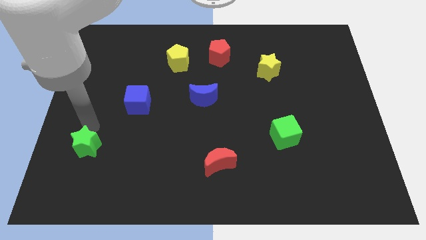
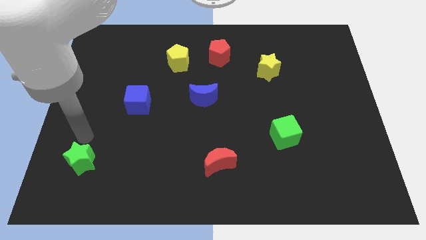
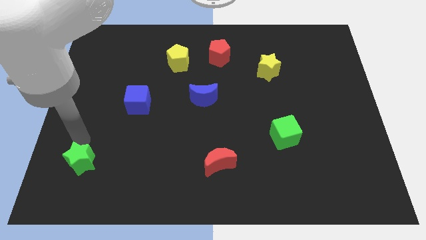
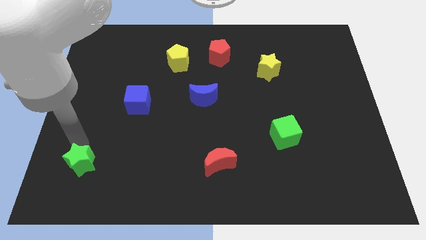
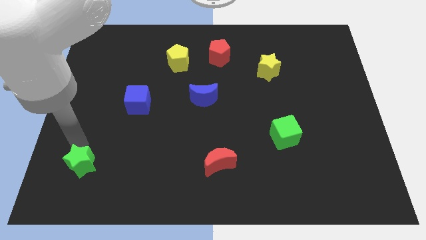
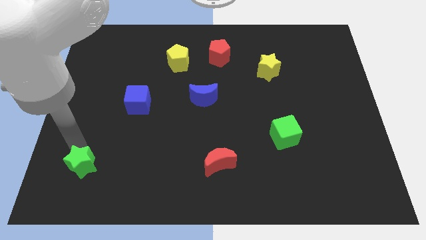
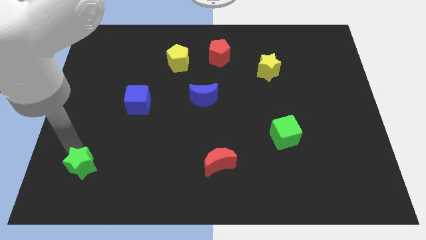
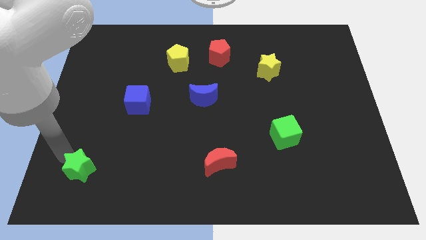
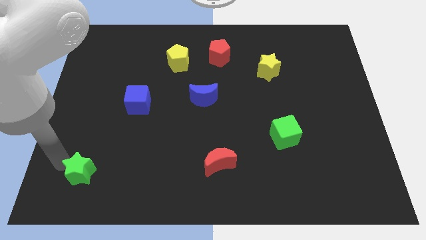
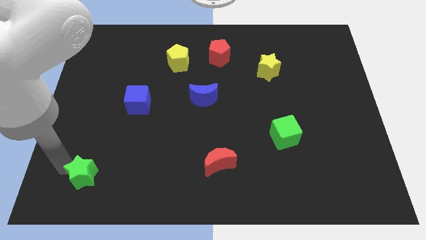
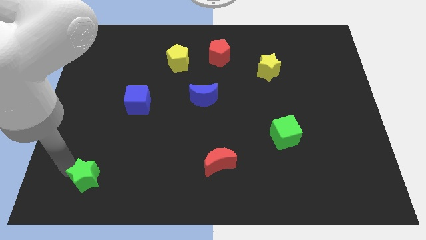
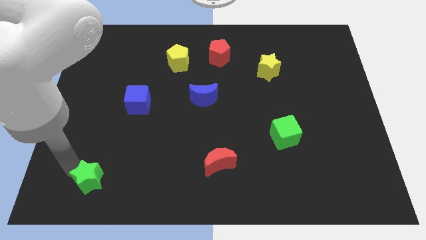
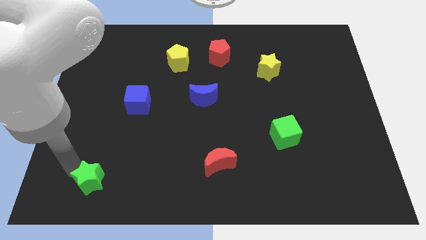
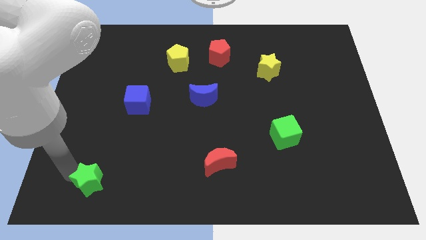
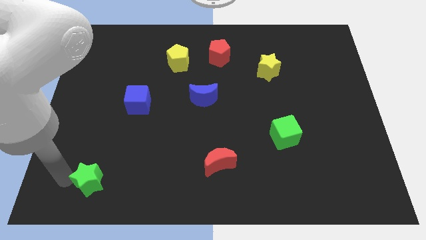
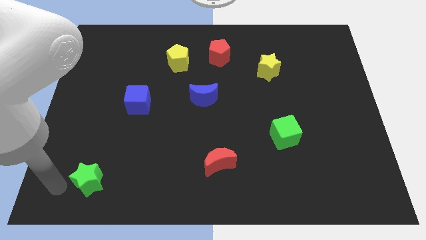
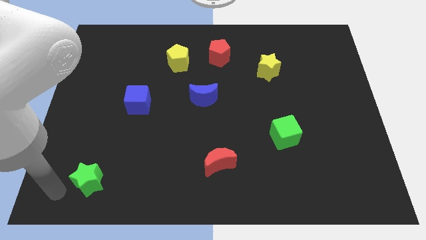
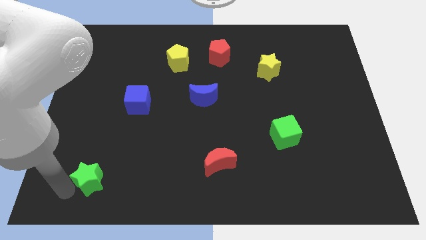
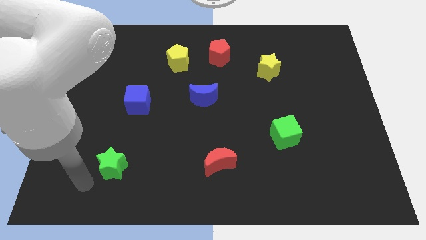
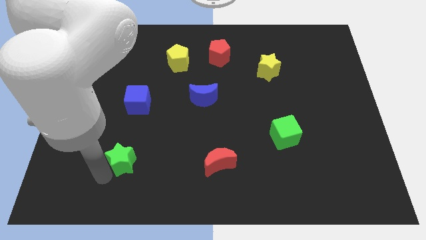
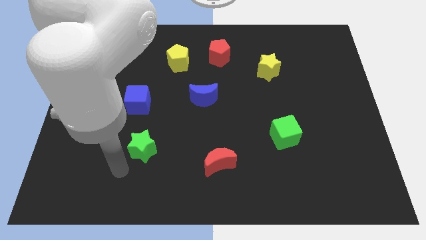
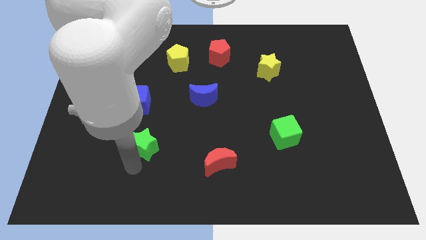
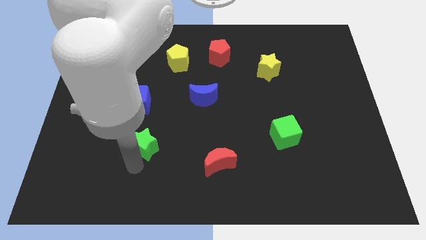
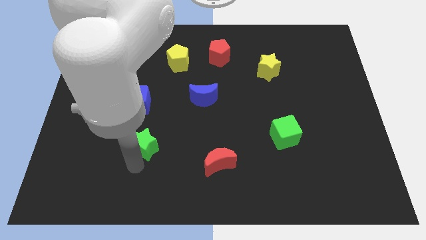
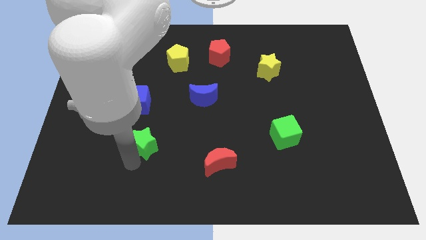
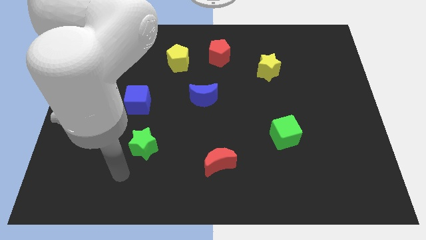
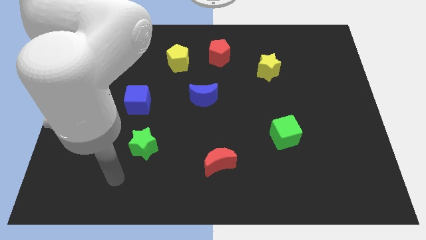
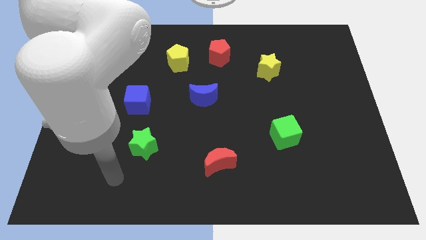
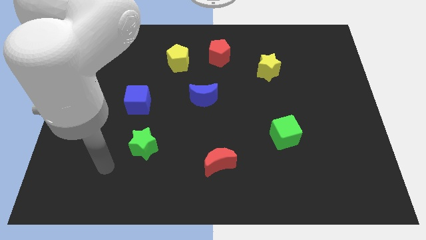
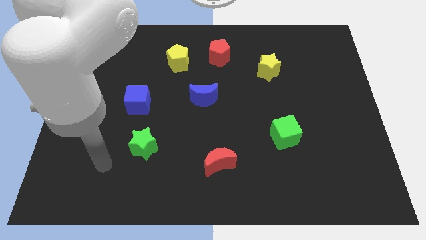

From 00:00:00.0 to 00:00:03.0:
place green star towards the bottom of blue cube

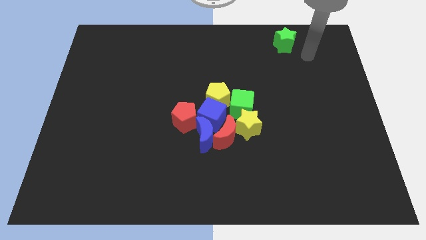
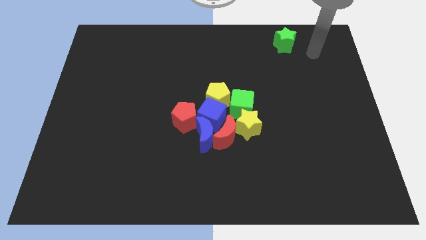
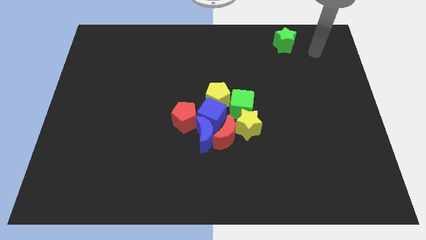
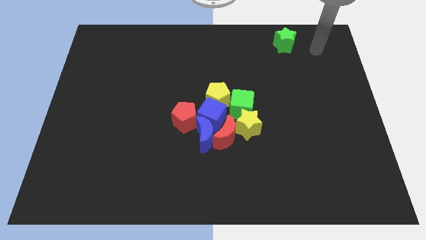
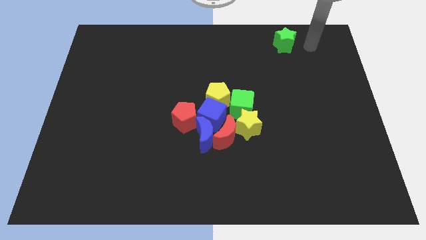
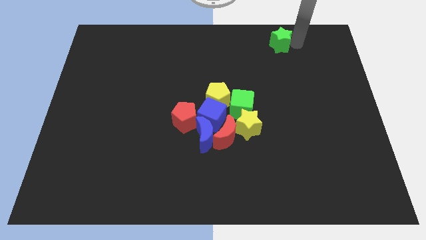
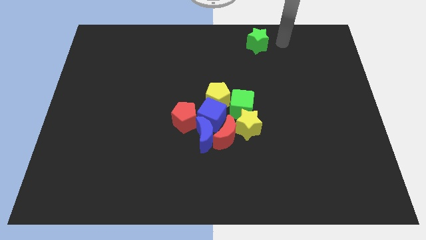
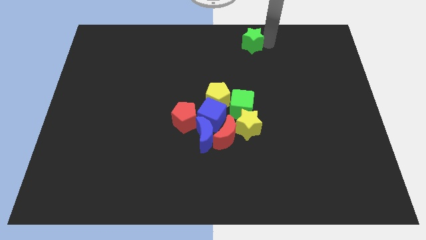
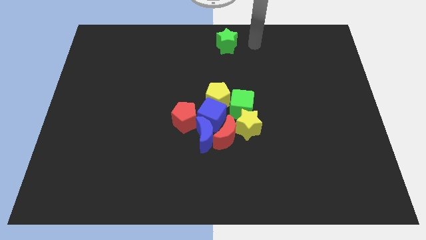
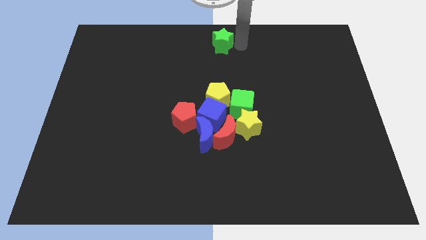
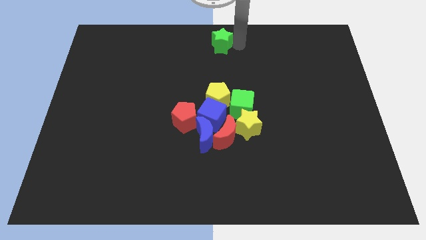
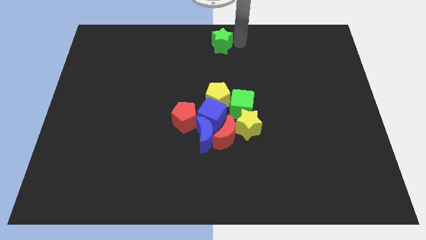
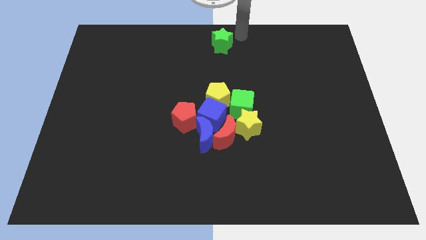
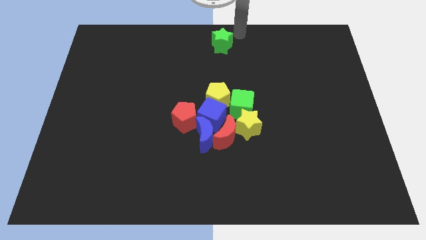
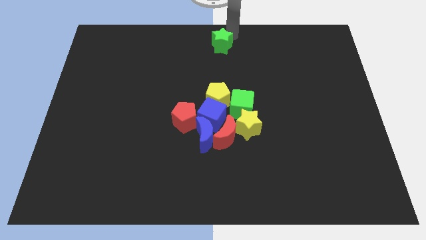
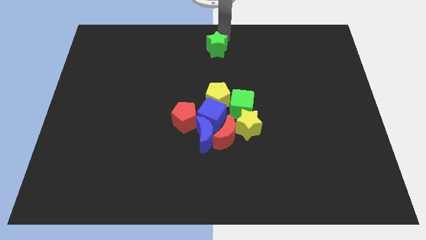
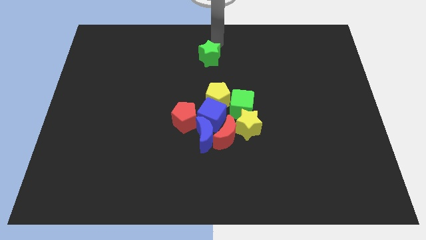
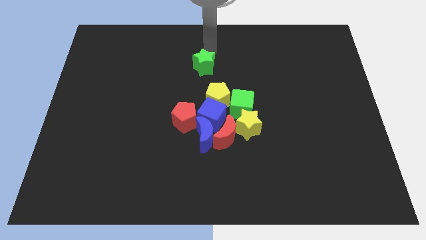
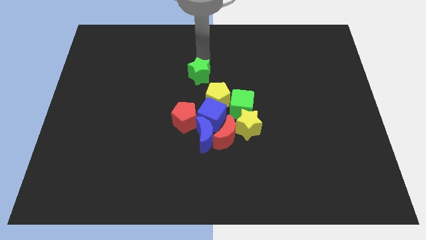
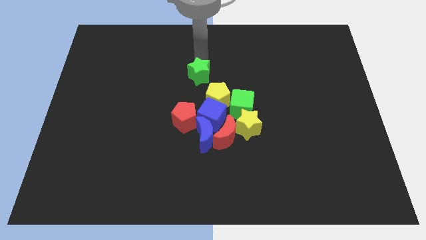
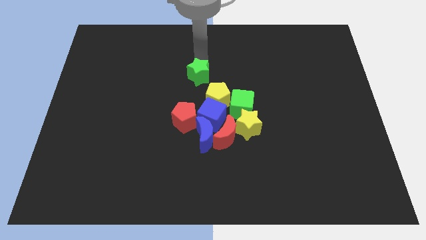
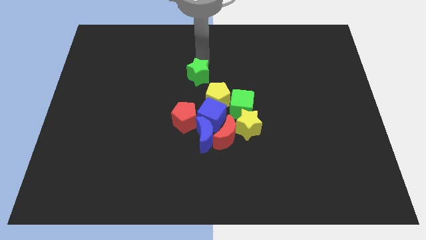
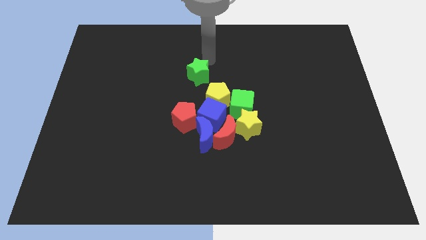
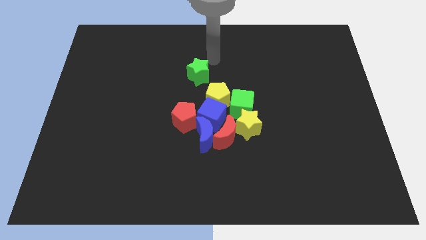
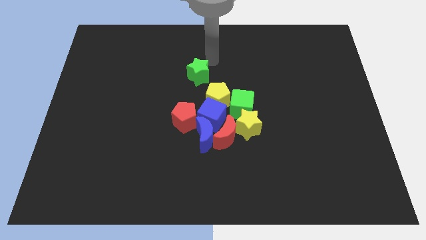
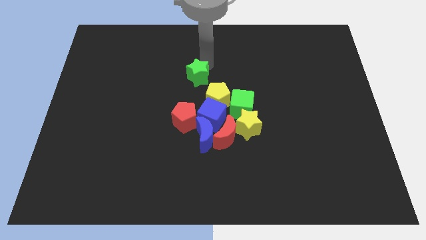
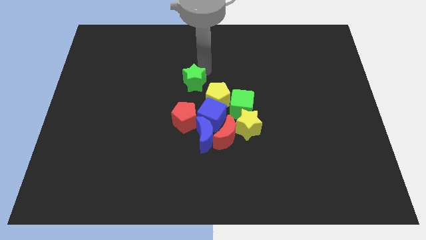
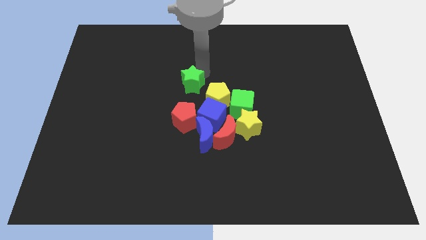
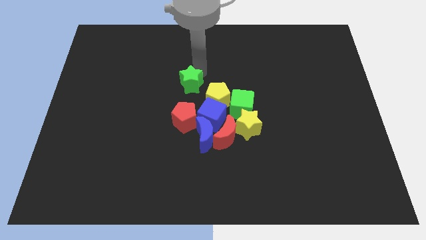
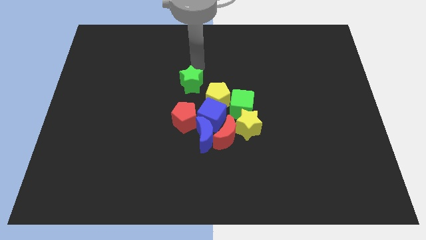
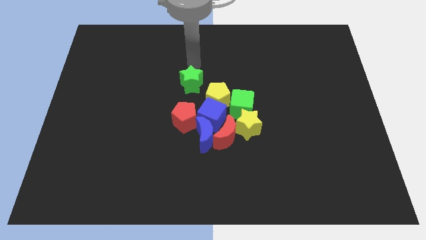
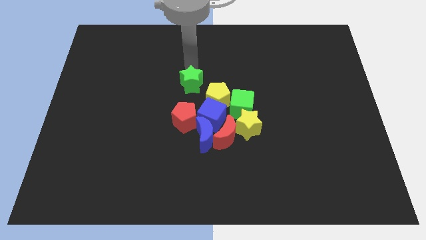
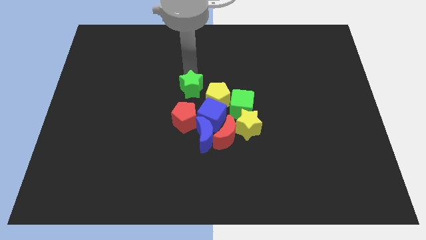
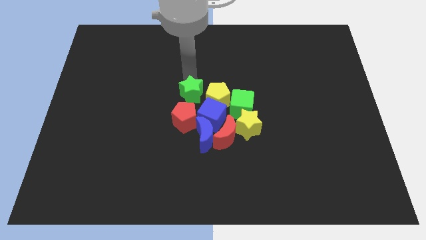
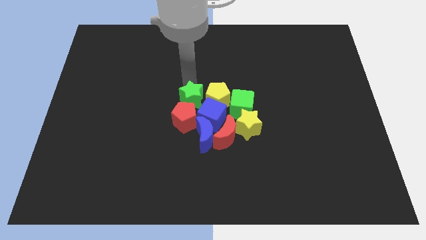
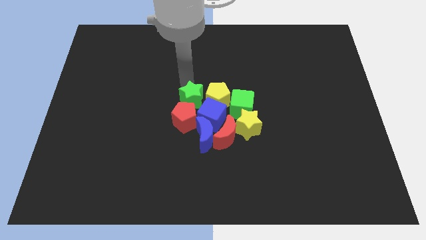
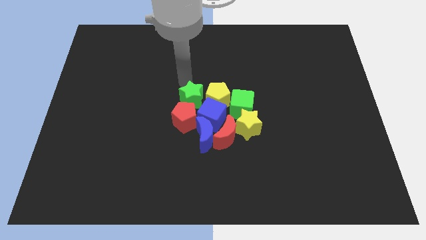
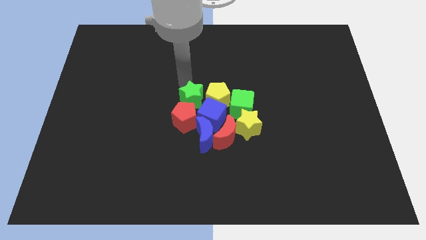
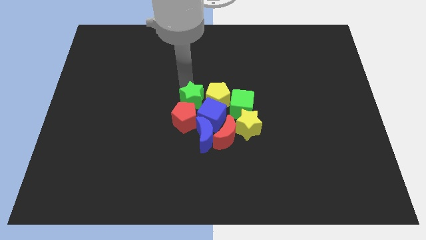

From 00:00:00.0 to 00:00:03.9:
push green star beside yellow pentagon

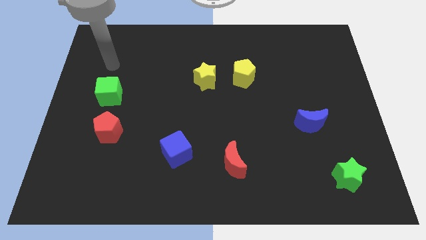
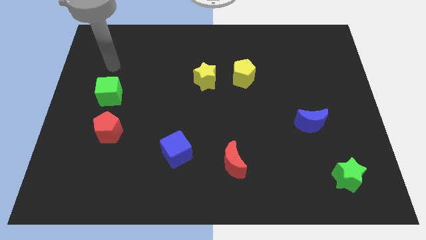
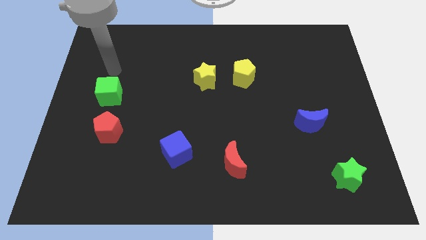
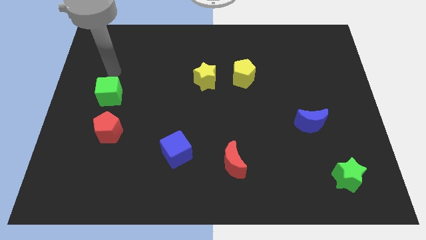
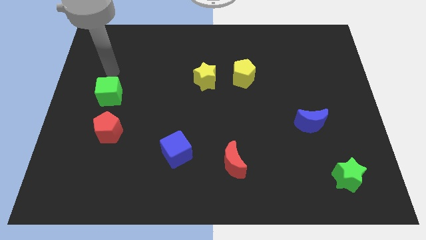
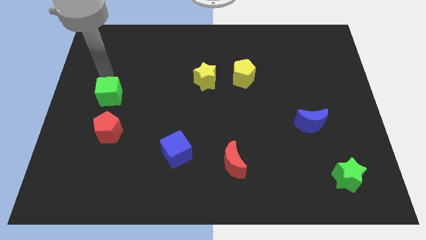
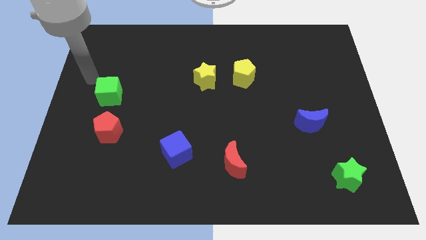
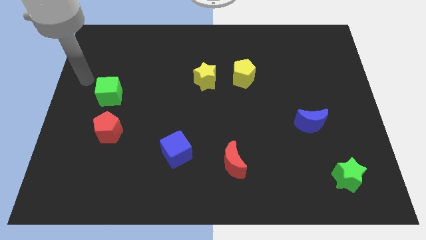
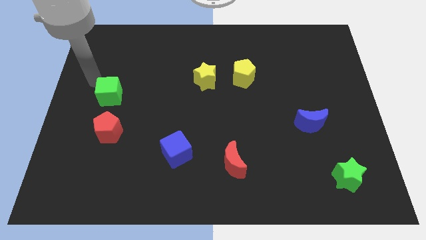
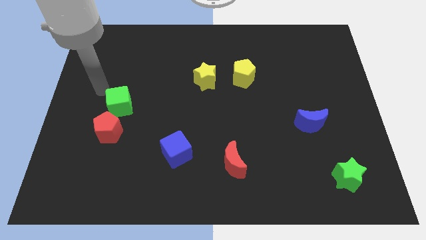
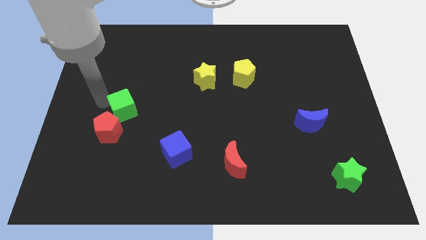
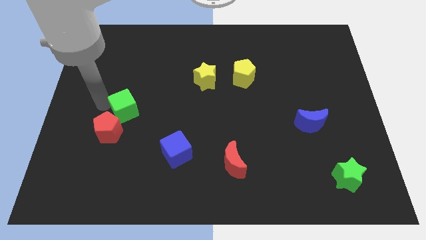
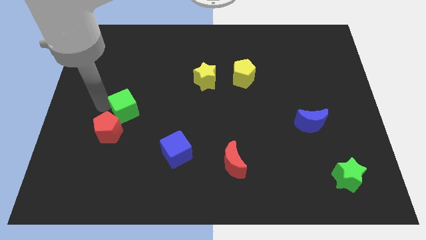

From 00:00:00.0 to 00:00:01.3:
place the green cube at the top right side of red pentagon

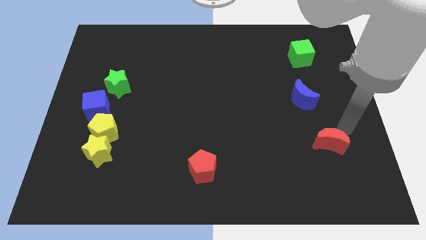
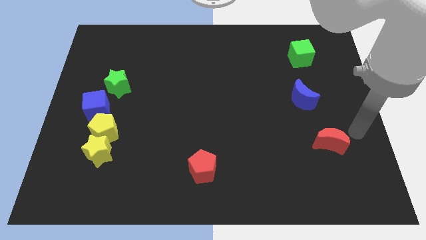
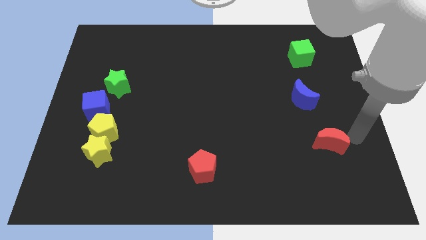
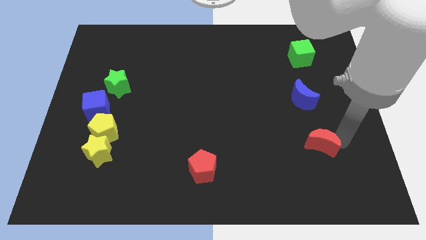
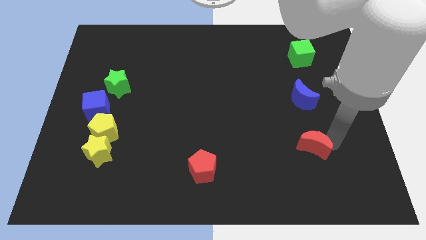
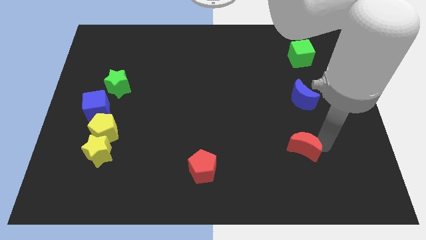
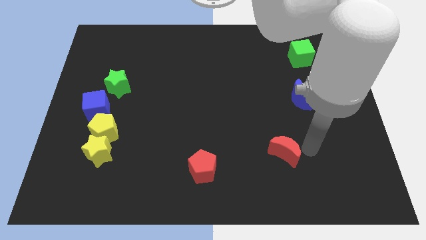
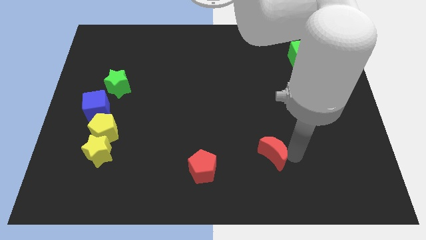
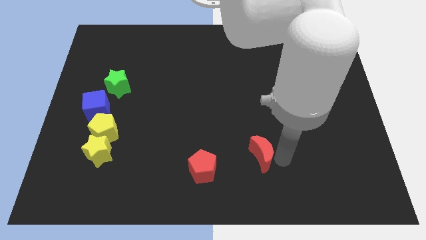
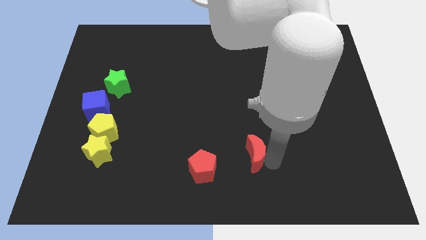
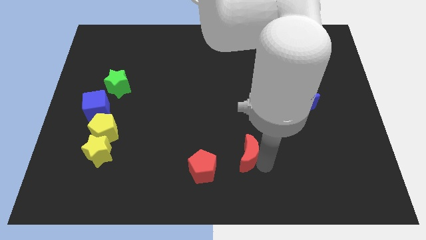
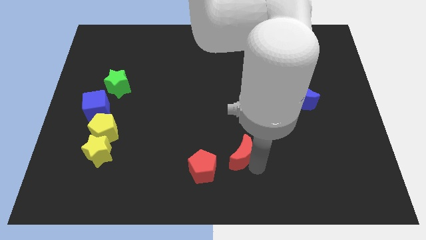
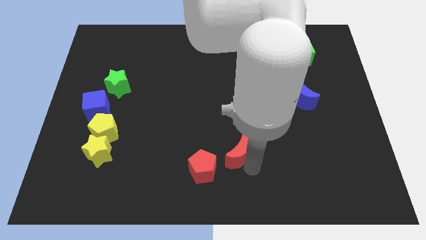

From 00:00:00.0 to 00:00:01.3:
push the red moon towards the red pentagon
